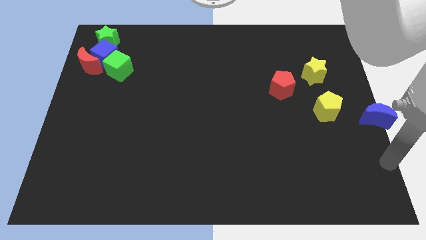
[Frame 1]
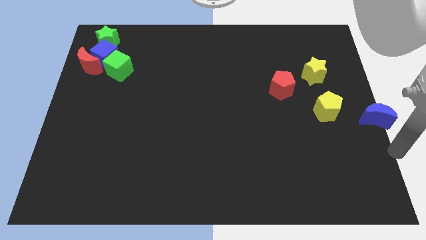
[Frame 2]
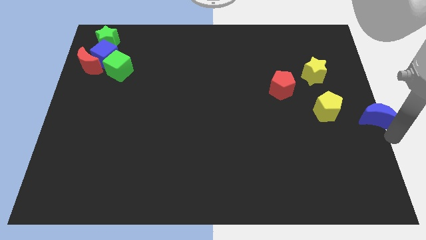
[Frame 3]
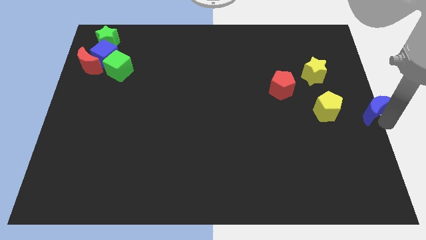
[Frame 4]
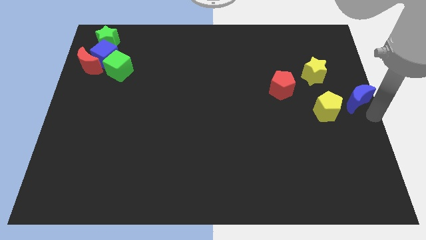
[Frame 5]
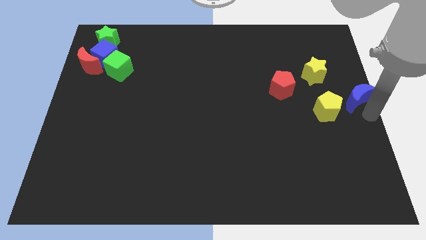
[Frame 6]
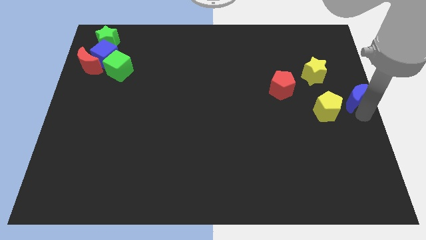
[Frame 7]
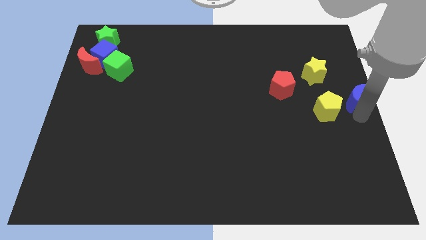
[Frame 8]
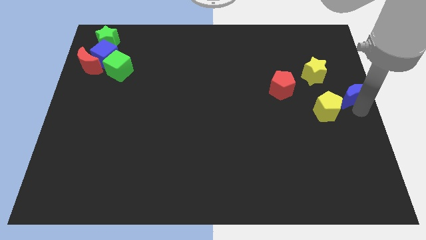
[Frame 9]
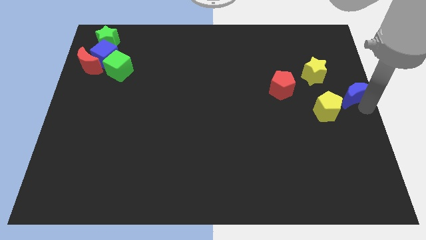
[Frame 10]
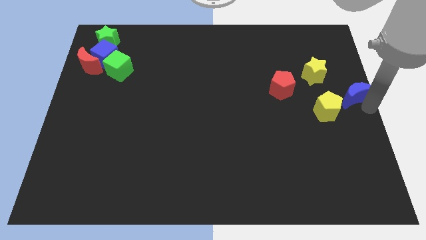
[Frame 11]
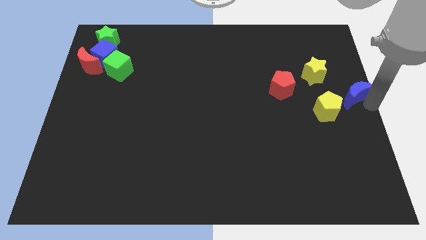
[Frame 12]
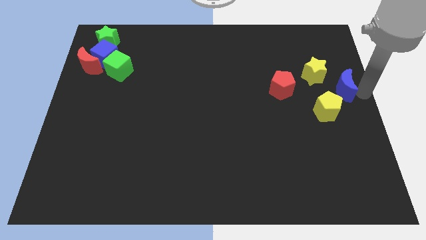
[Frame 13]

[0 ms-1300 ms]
push the blue crescent diagnol to the yellow star

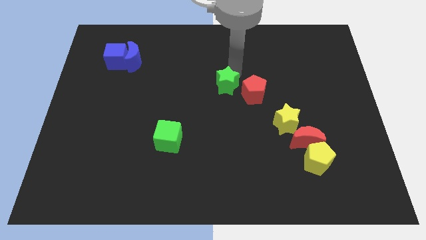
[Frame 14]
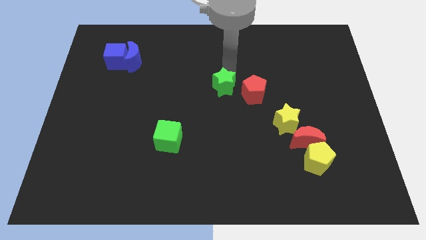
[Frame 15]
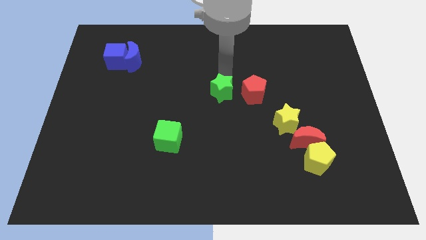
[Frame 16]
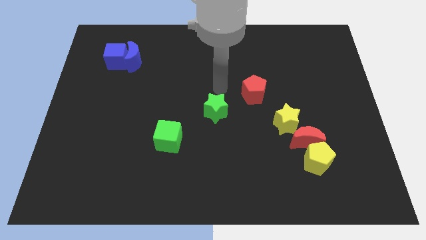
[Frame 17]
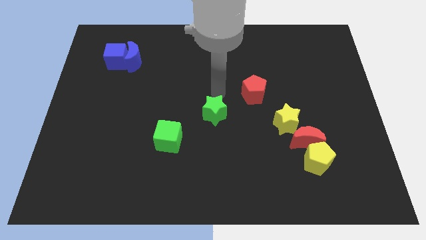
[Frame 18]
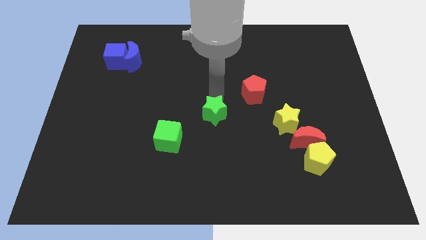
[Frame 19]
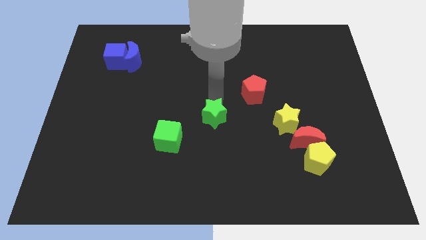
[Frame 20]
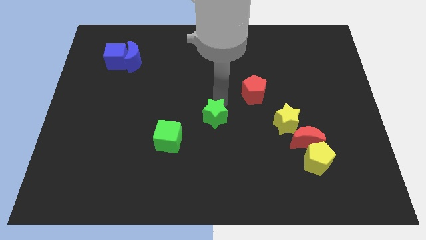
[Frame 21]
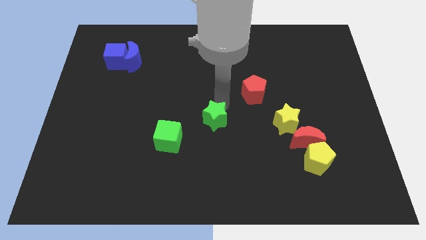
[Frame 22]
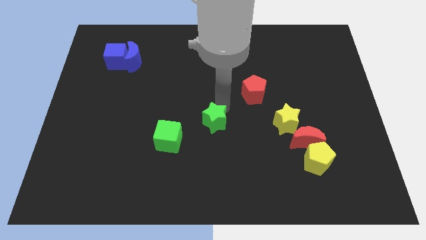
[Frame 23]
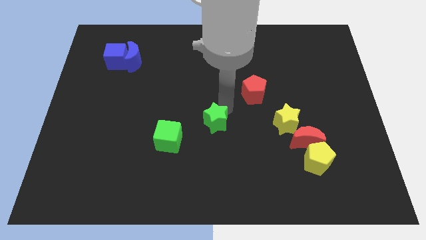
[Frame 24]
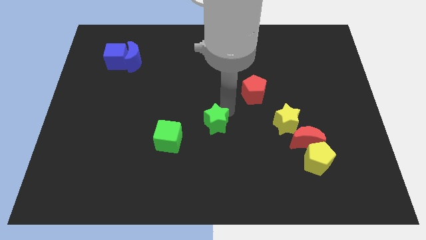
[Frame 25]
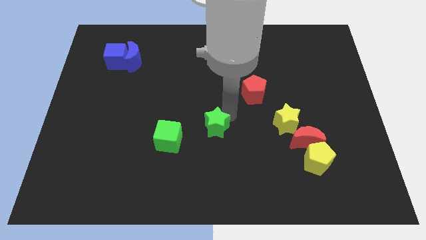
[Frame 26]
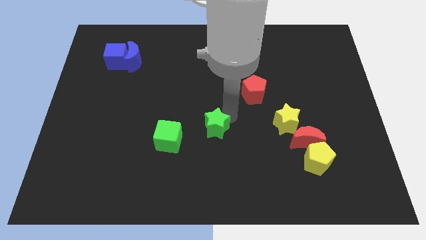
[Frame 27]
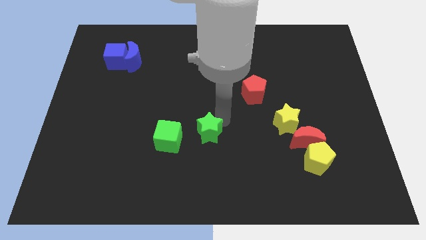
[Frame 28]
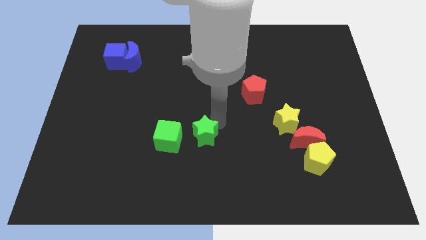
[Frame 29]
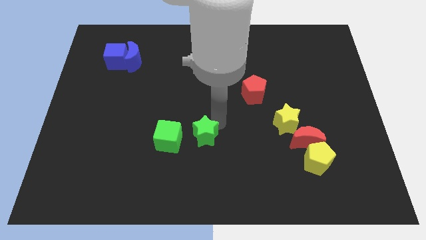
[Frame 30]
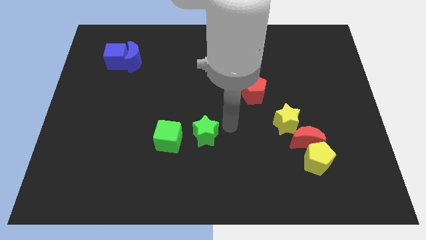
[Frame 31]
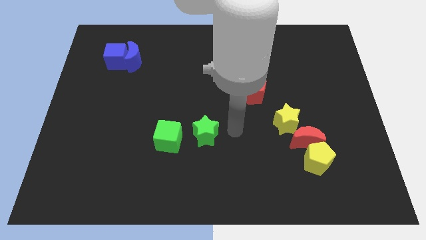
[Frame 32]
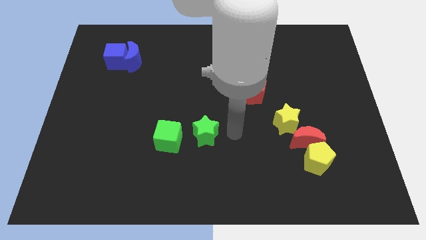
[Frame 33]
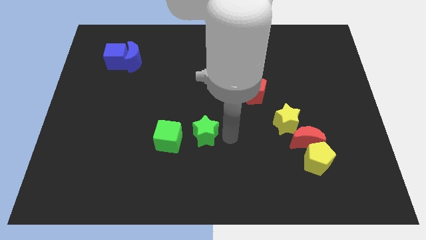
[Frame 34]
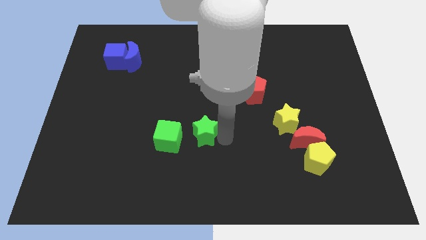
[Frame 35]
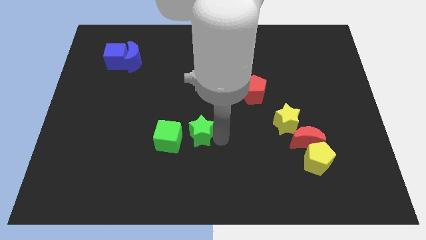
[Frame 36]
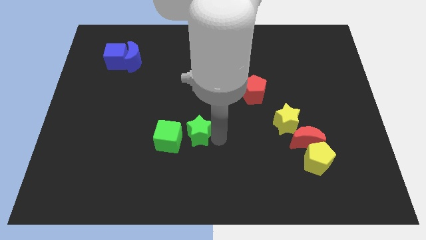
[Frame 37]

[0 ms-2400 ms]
place the green star to the right side of green cube

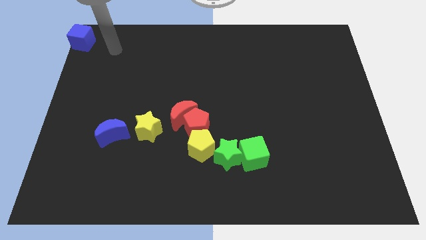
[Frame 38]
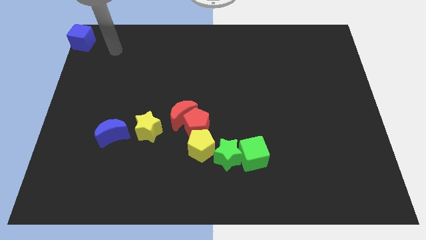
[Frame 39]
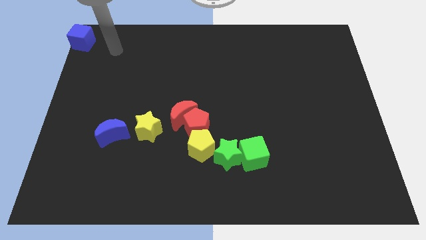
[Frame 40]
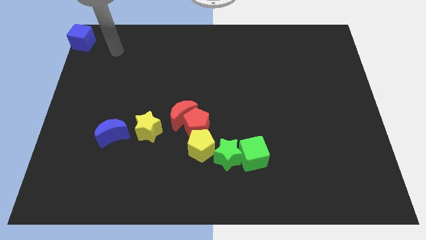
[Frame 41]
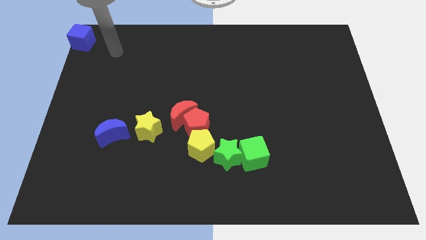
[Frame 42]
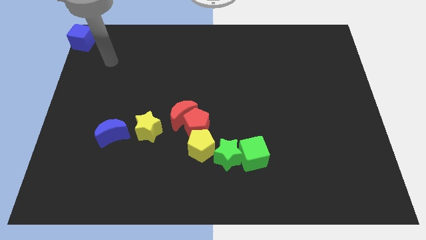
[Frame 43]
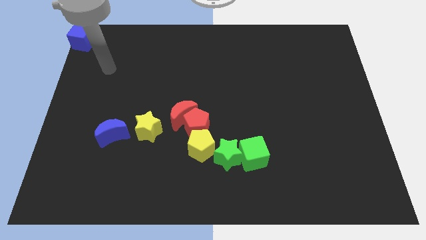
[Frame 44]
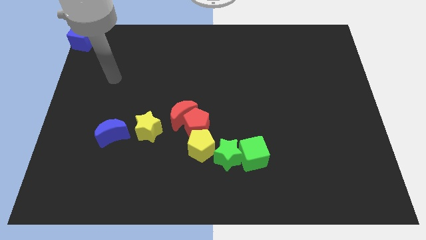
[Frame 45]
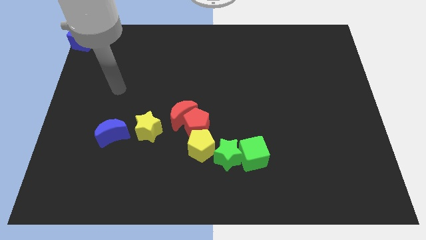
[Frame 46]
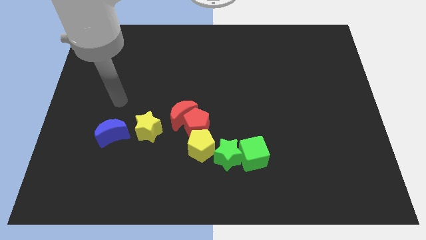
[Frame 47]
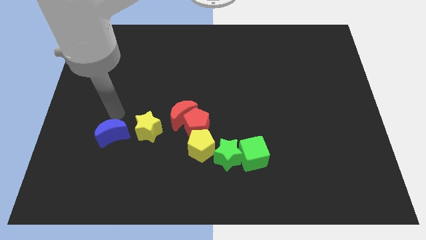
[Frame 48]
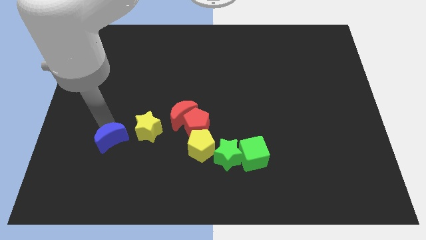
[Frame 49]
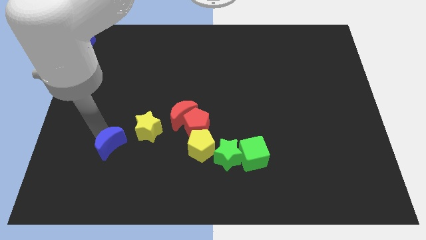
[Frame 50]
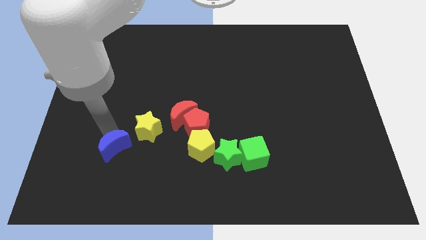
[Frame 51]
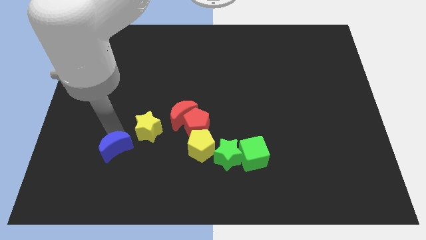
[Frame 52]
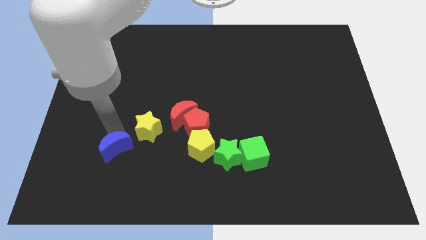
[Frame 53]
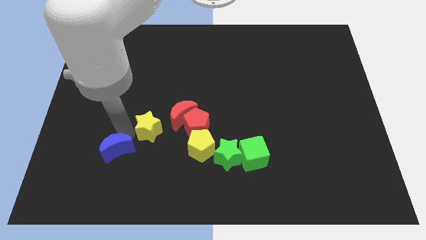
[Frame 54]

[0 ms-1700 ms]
place the blue moon diagonally to the yellow star

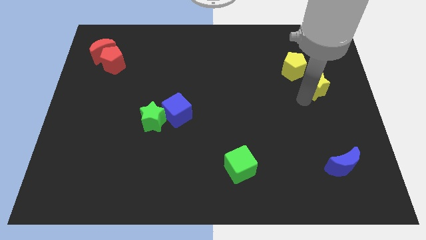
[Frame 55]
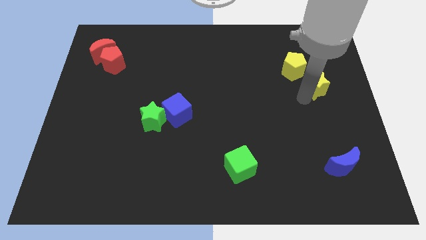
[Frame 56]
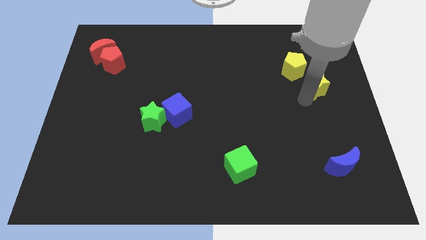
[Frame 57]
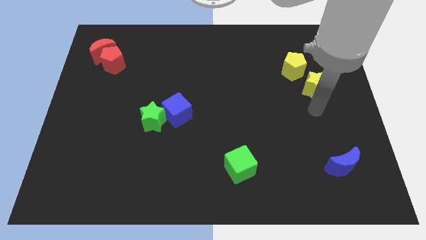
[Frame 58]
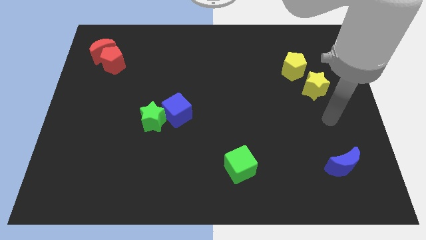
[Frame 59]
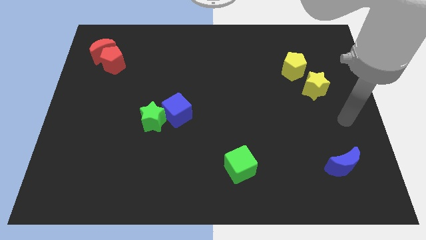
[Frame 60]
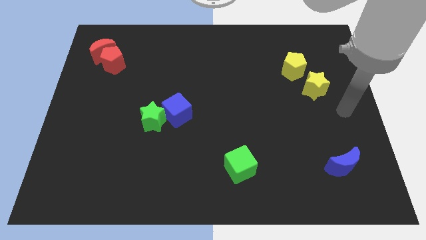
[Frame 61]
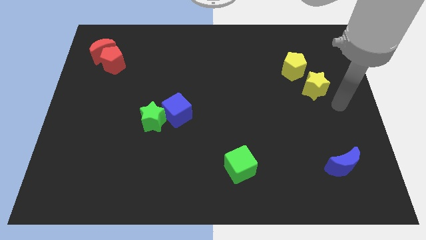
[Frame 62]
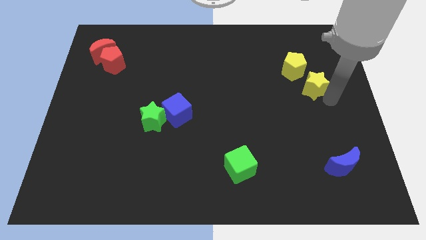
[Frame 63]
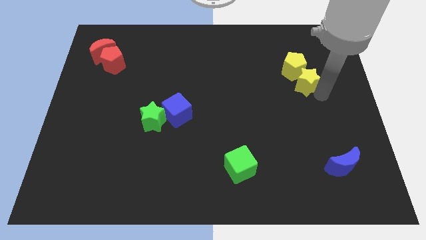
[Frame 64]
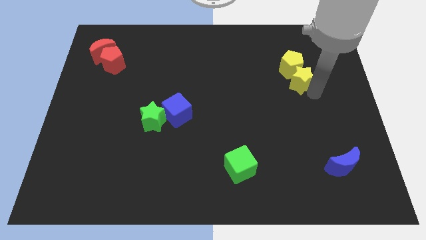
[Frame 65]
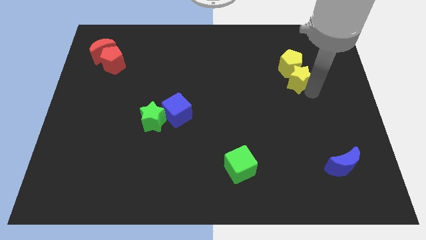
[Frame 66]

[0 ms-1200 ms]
push the yellow star into yellow pentagon

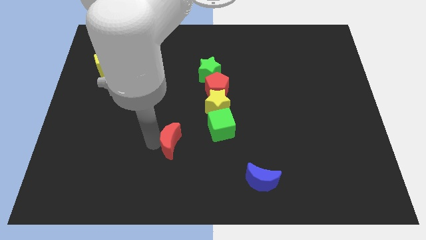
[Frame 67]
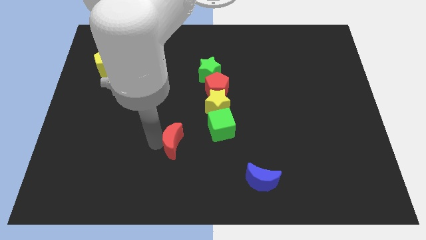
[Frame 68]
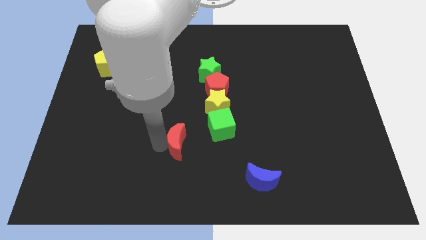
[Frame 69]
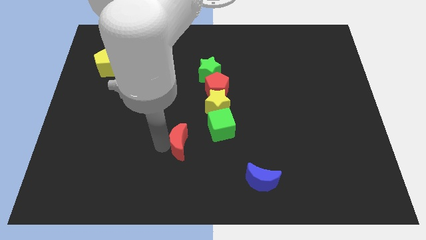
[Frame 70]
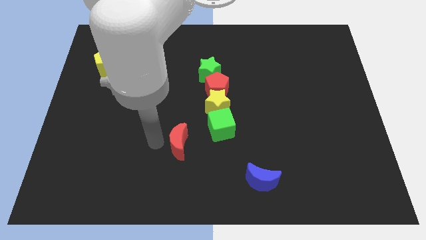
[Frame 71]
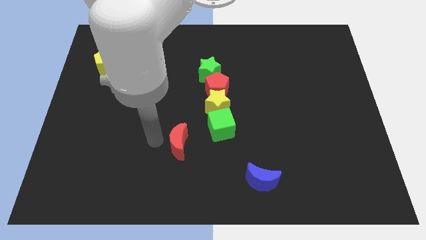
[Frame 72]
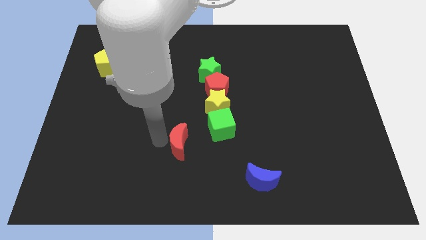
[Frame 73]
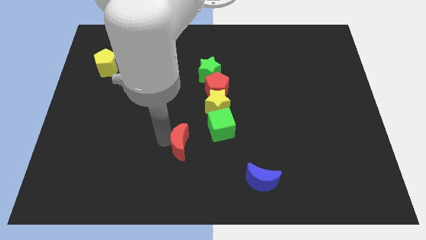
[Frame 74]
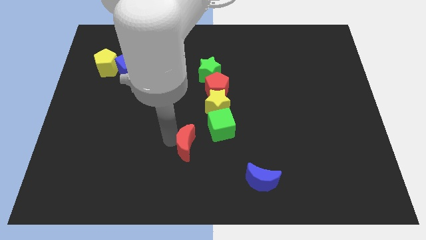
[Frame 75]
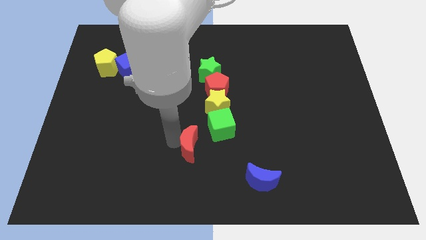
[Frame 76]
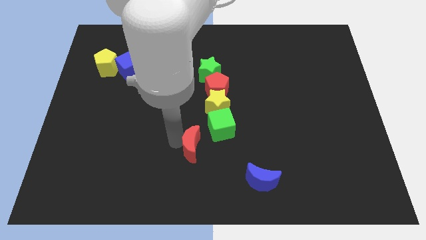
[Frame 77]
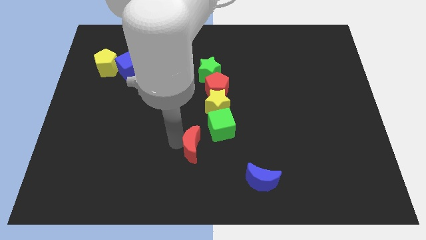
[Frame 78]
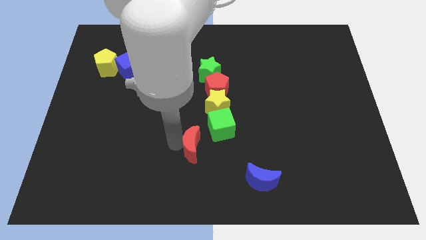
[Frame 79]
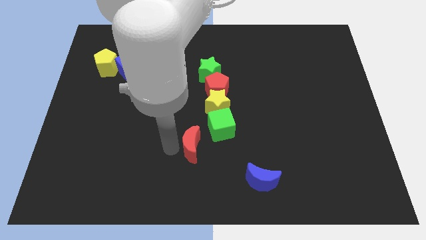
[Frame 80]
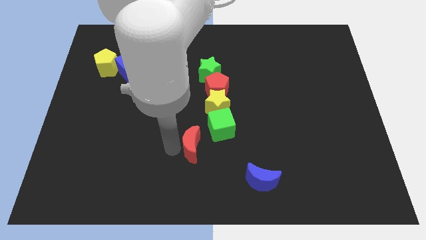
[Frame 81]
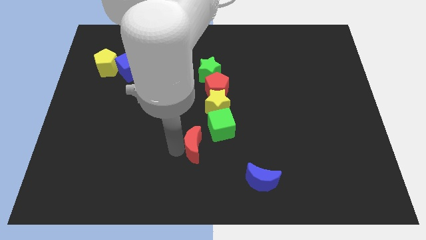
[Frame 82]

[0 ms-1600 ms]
push the red crescent close to the green cube

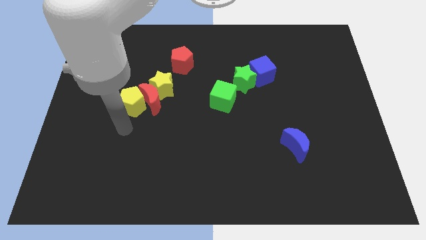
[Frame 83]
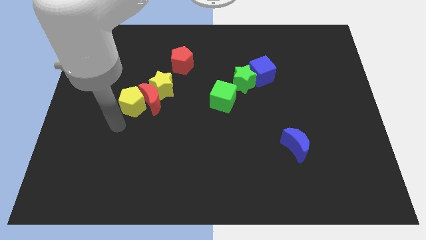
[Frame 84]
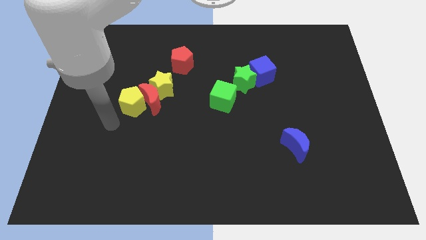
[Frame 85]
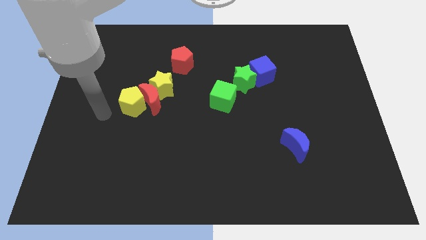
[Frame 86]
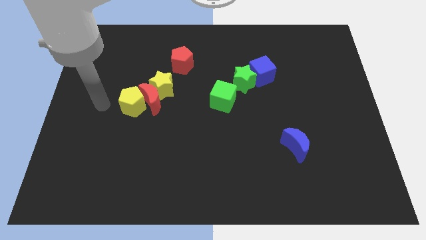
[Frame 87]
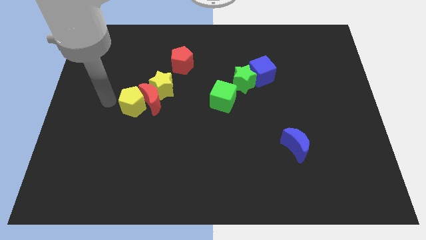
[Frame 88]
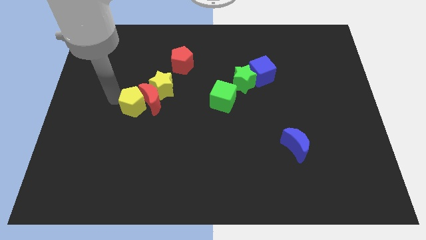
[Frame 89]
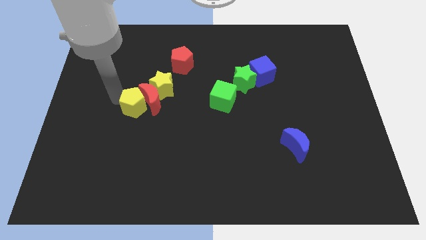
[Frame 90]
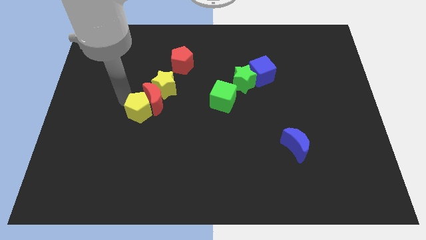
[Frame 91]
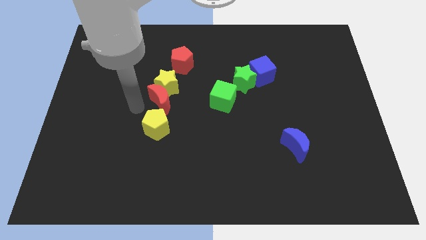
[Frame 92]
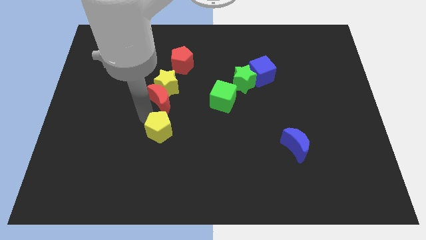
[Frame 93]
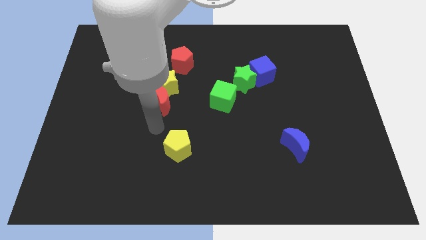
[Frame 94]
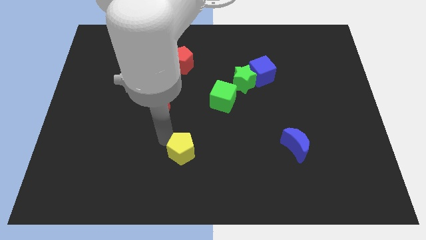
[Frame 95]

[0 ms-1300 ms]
separate yellow pentagon from the red crescent
